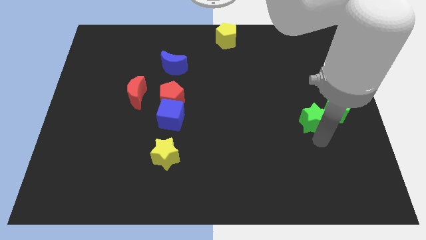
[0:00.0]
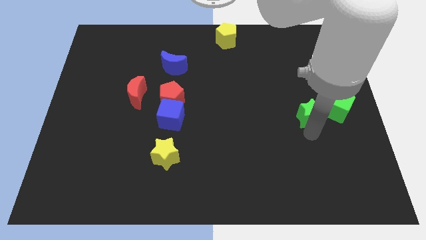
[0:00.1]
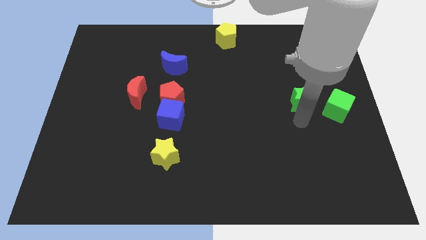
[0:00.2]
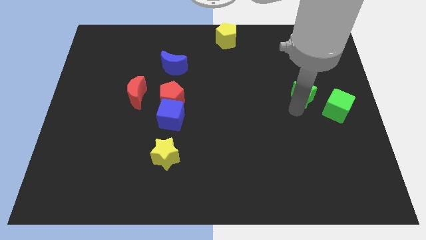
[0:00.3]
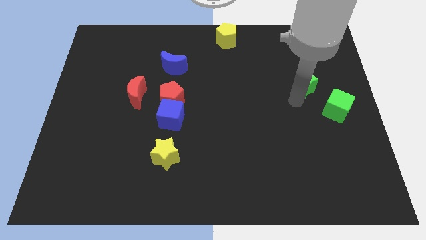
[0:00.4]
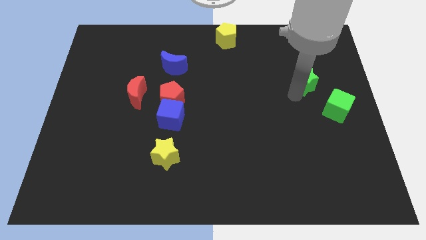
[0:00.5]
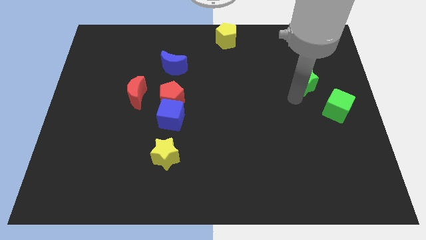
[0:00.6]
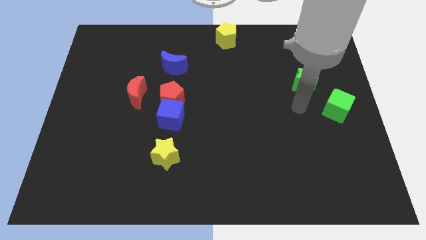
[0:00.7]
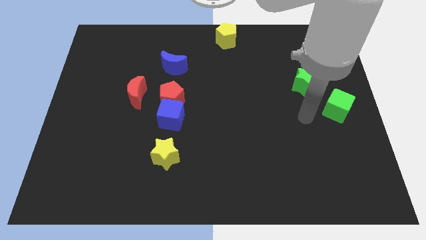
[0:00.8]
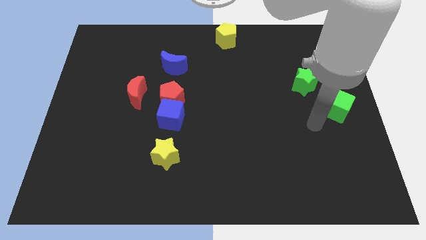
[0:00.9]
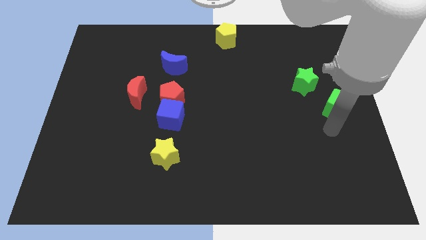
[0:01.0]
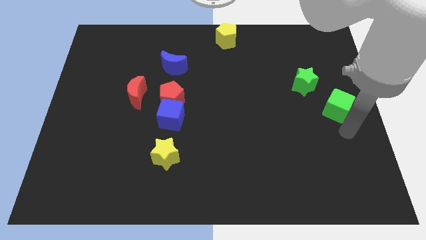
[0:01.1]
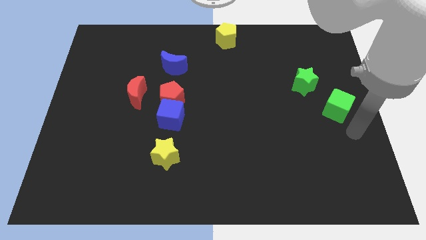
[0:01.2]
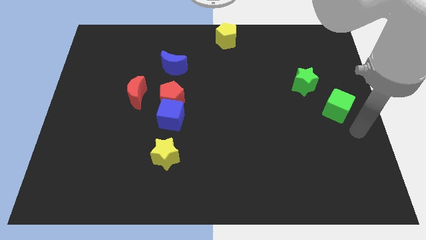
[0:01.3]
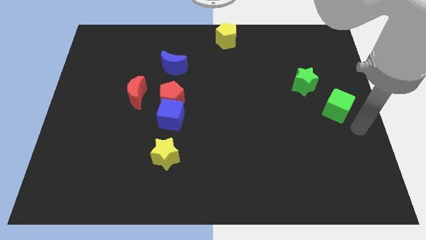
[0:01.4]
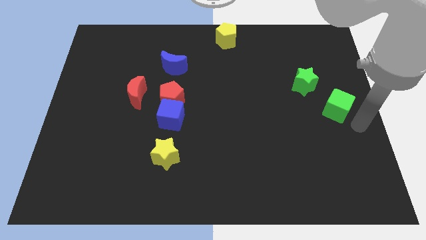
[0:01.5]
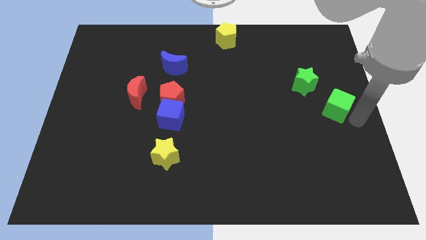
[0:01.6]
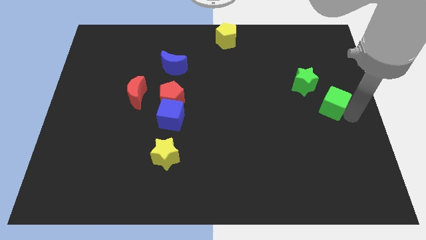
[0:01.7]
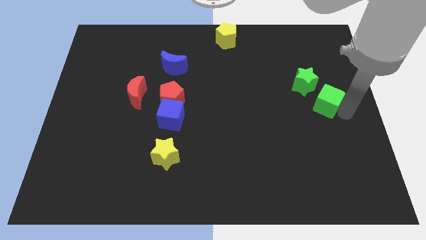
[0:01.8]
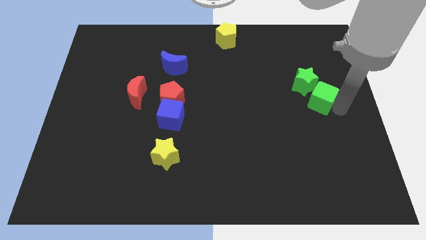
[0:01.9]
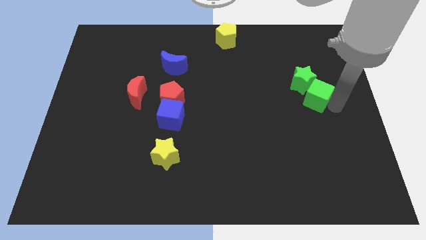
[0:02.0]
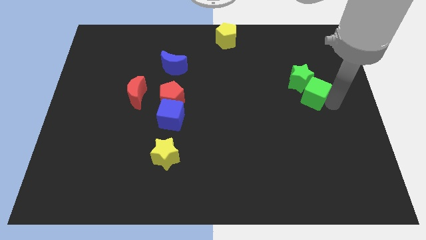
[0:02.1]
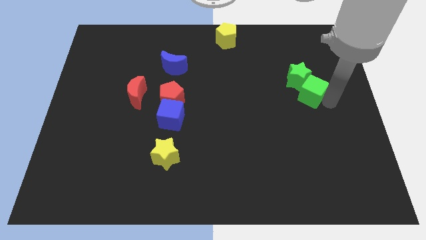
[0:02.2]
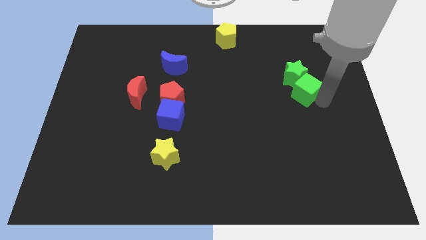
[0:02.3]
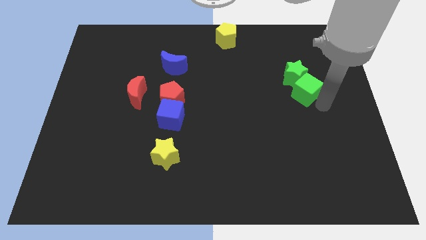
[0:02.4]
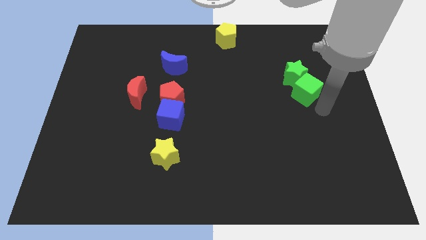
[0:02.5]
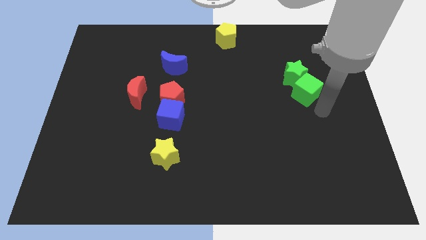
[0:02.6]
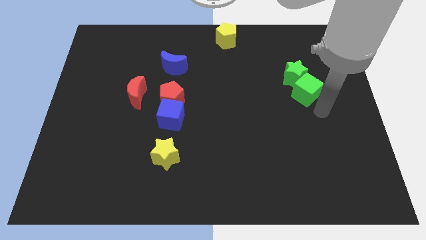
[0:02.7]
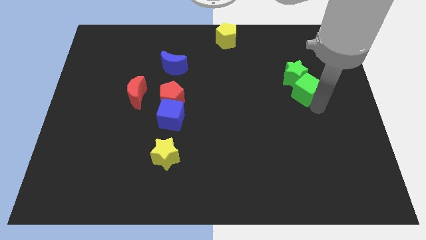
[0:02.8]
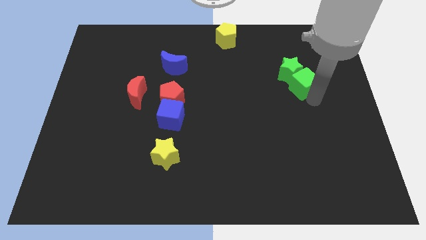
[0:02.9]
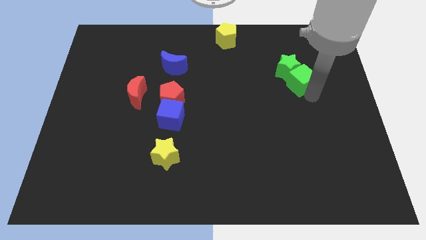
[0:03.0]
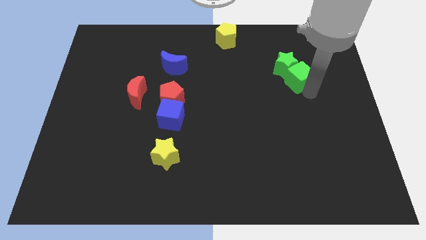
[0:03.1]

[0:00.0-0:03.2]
push the green blocks towards the top side of the board

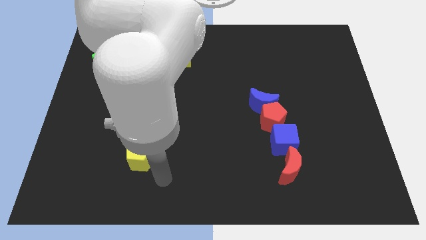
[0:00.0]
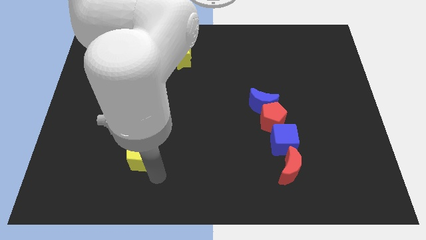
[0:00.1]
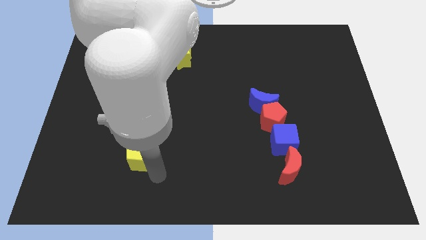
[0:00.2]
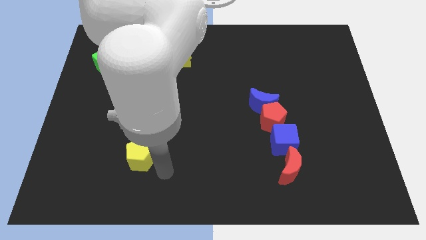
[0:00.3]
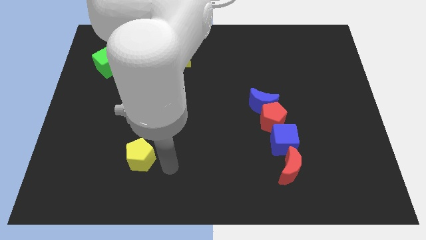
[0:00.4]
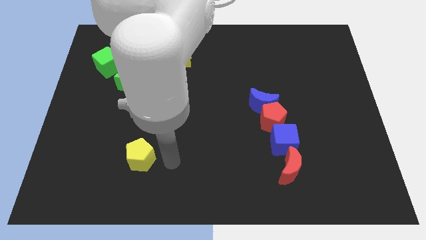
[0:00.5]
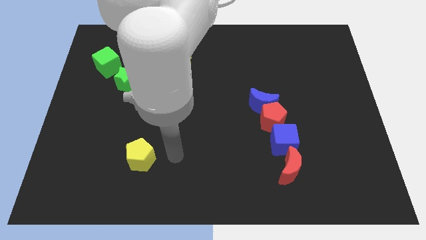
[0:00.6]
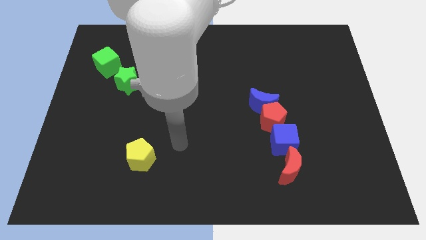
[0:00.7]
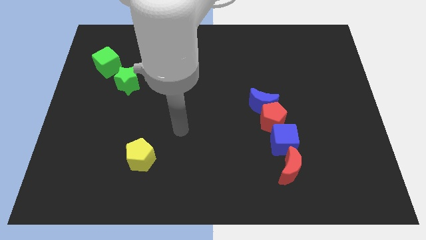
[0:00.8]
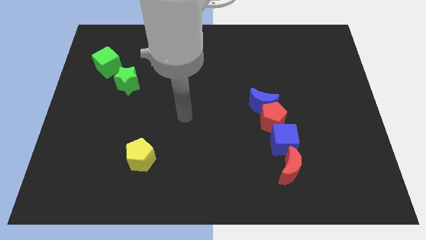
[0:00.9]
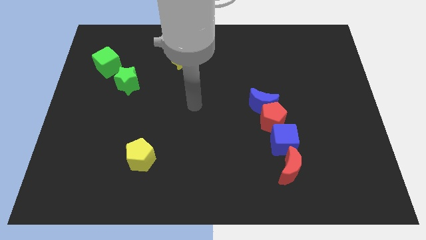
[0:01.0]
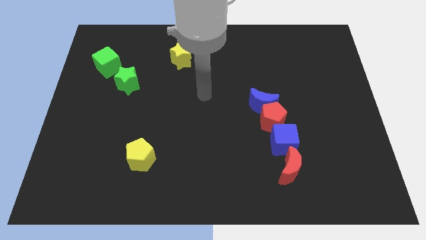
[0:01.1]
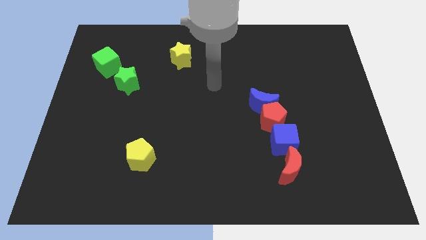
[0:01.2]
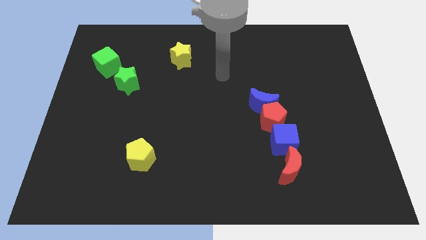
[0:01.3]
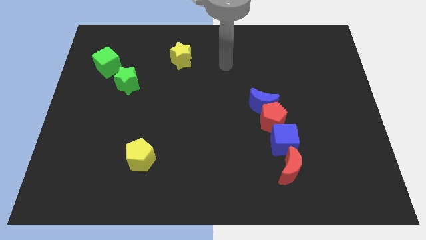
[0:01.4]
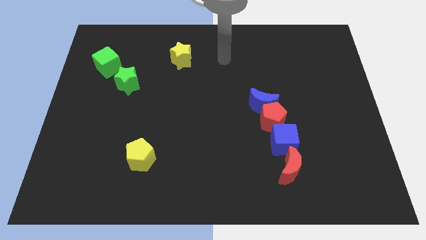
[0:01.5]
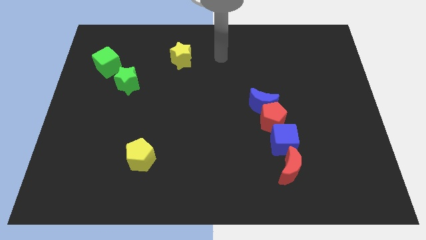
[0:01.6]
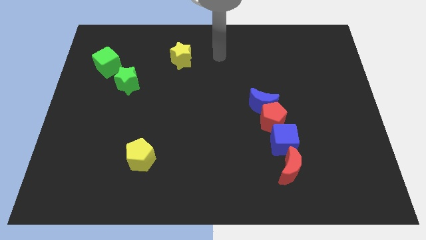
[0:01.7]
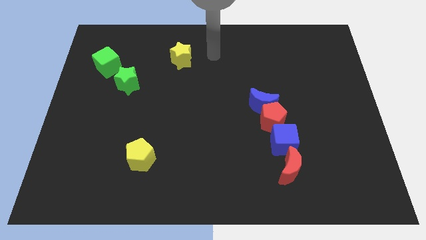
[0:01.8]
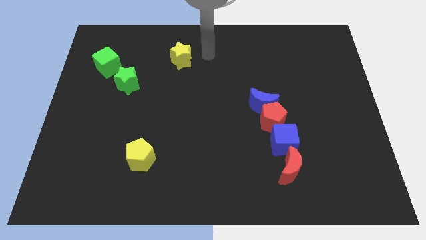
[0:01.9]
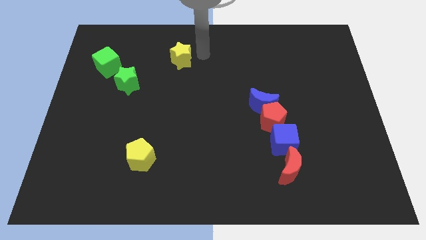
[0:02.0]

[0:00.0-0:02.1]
move your arm towards the yellow star

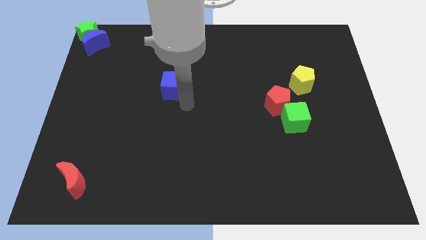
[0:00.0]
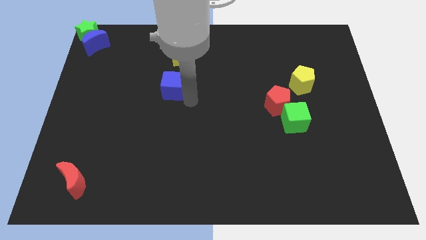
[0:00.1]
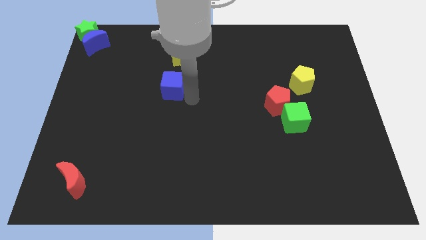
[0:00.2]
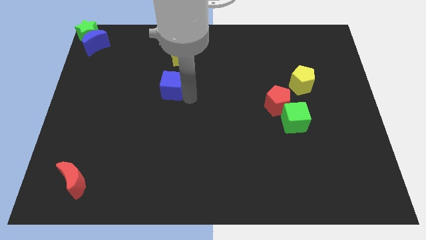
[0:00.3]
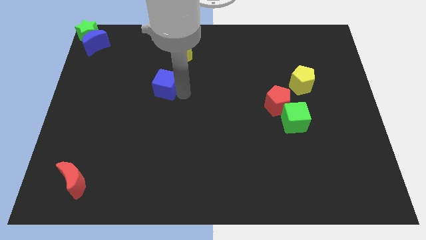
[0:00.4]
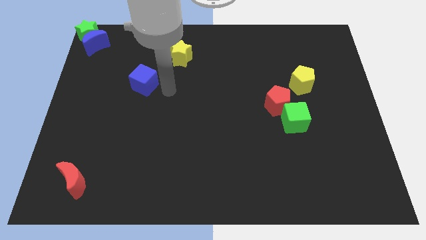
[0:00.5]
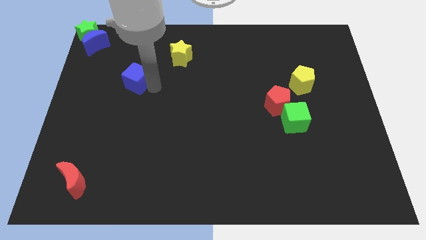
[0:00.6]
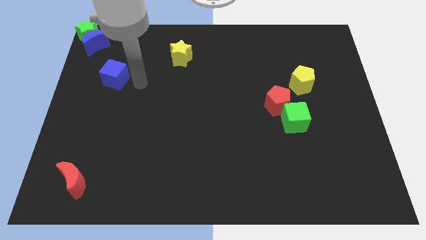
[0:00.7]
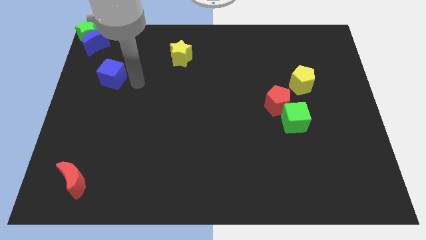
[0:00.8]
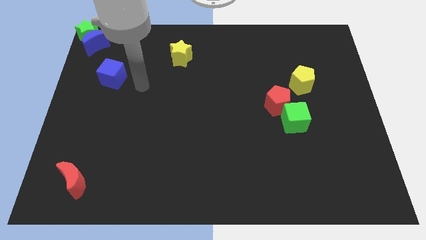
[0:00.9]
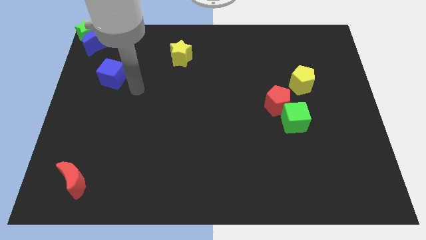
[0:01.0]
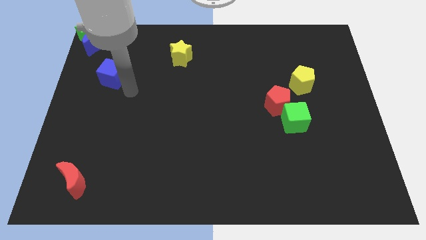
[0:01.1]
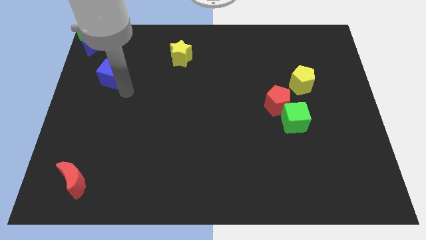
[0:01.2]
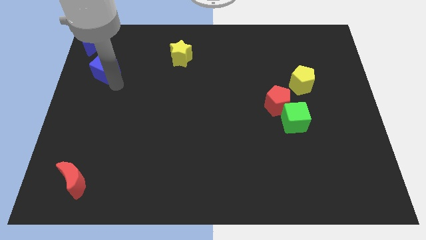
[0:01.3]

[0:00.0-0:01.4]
place the blue cube below the blue moon

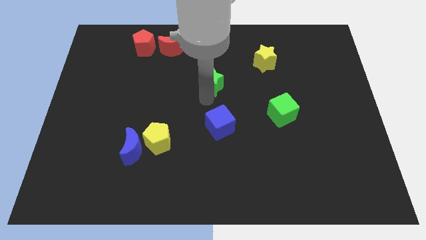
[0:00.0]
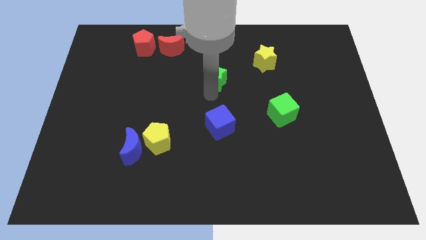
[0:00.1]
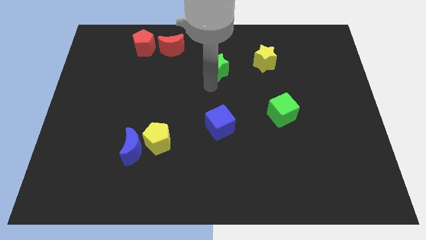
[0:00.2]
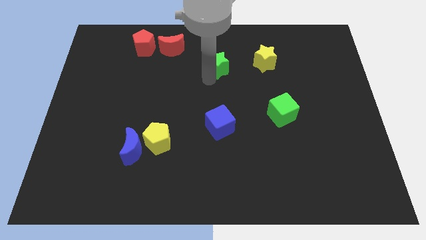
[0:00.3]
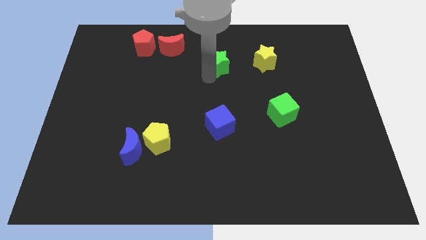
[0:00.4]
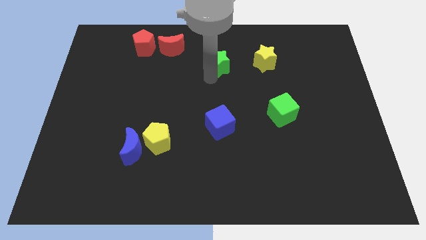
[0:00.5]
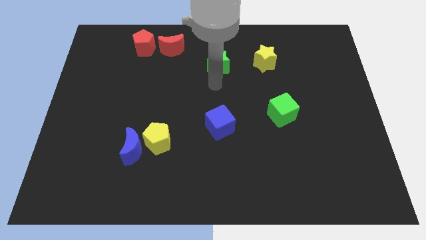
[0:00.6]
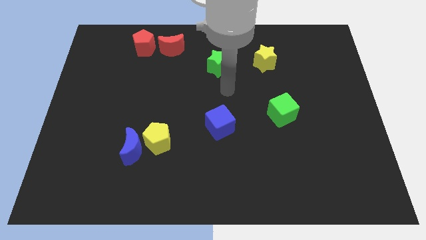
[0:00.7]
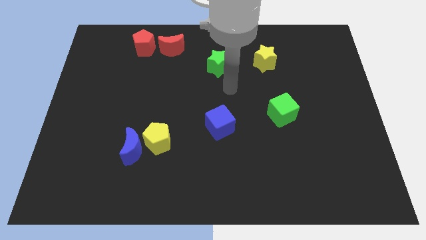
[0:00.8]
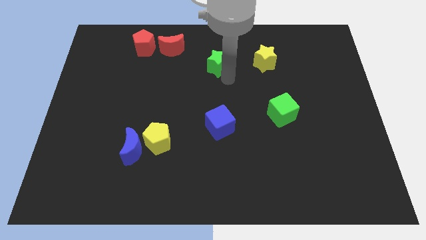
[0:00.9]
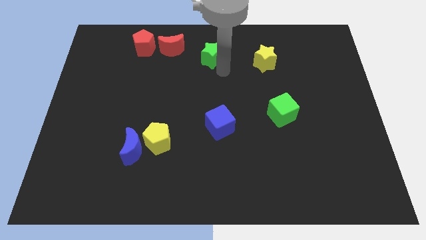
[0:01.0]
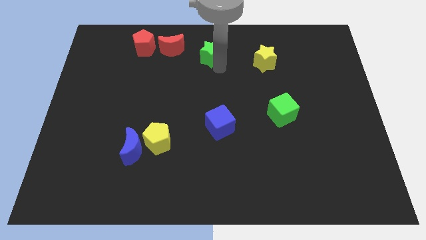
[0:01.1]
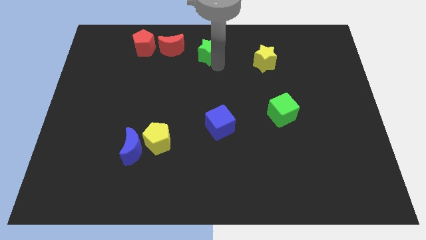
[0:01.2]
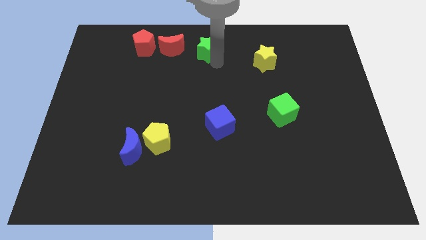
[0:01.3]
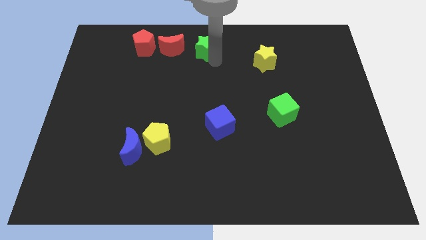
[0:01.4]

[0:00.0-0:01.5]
put the green star between the red moon and yellow star

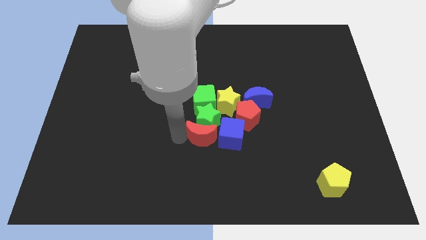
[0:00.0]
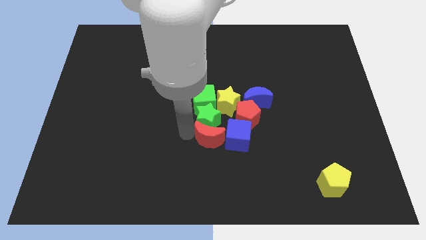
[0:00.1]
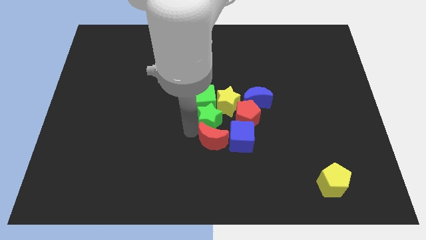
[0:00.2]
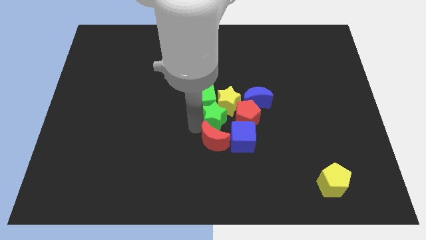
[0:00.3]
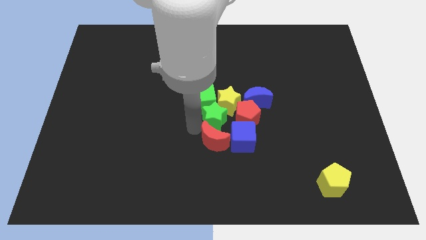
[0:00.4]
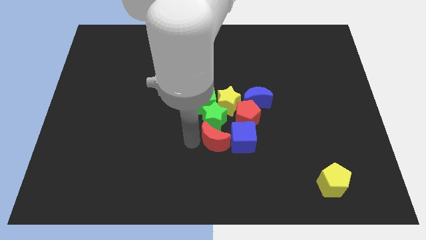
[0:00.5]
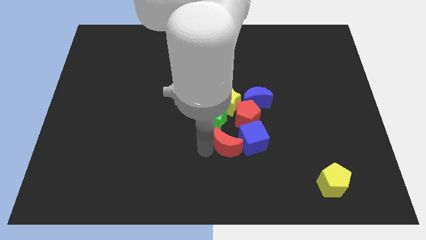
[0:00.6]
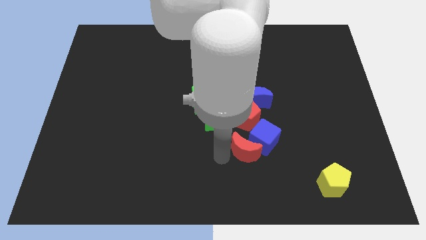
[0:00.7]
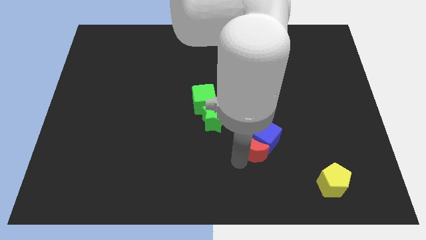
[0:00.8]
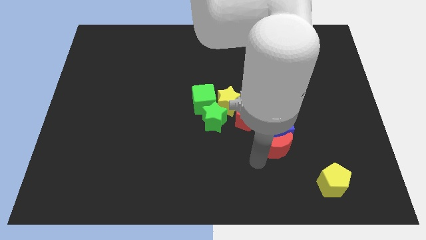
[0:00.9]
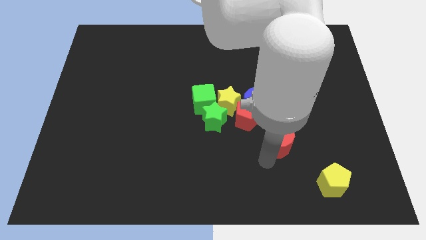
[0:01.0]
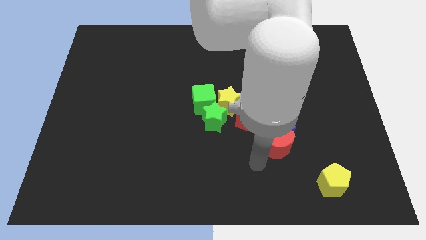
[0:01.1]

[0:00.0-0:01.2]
place the red crescent at the bottom of the blue cube
